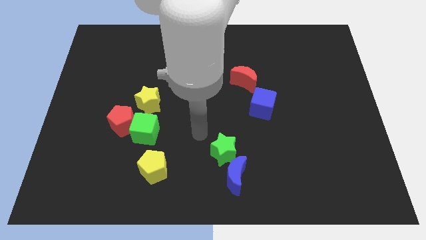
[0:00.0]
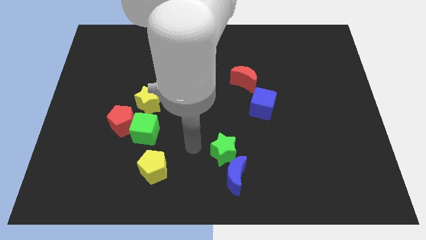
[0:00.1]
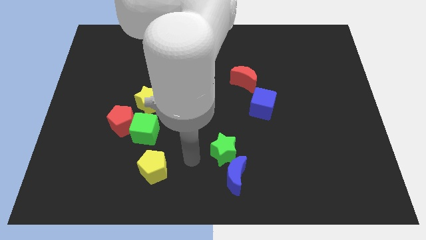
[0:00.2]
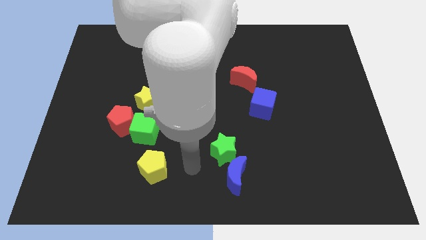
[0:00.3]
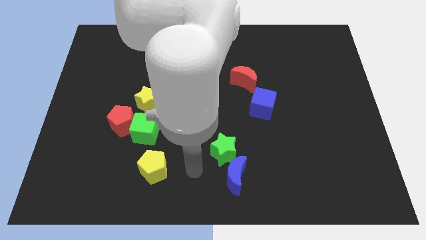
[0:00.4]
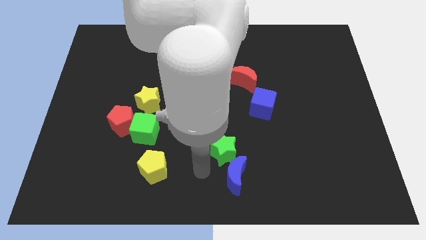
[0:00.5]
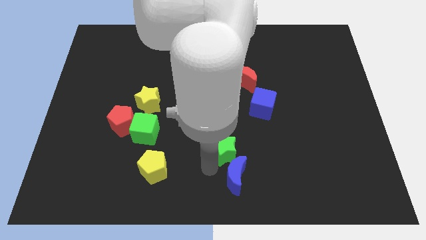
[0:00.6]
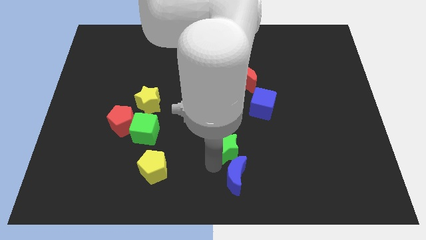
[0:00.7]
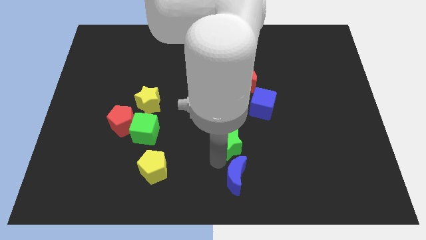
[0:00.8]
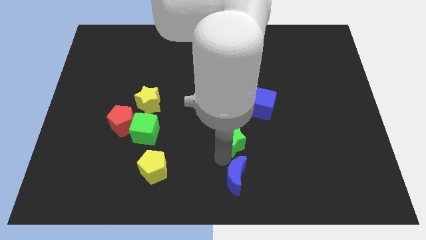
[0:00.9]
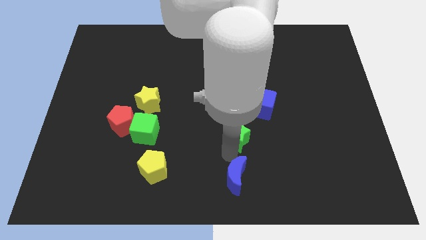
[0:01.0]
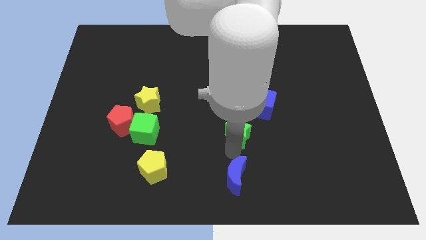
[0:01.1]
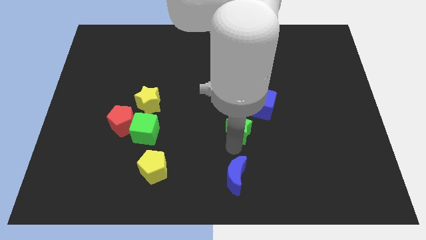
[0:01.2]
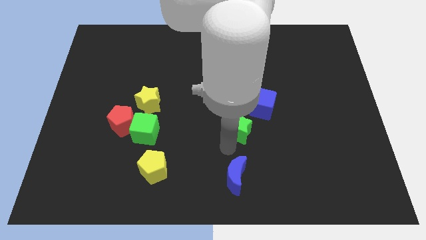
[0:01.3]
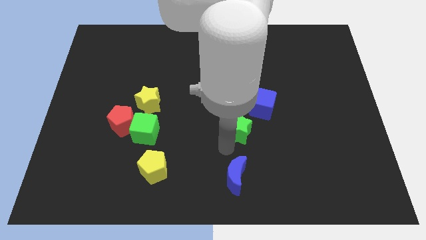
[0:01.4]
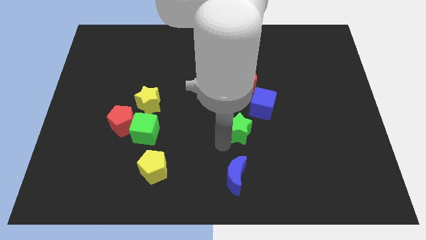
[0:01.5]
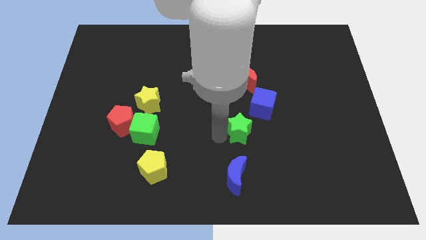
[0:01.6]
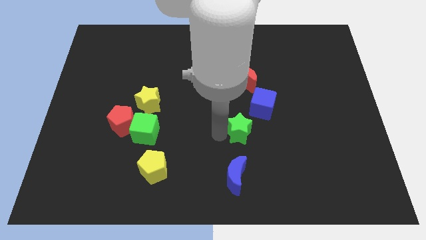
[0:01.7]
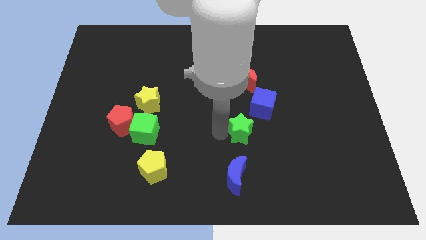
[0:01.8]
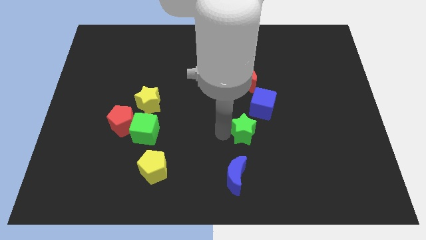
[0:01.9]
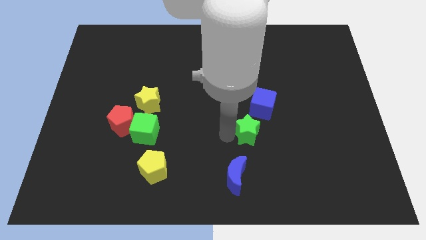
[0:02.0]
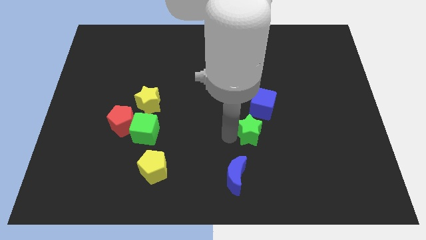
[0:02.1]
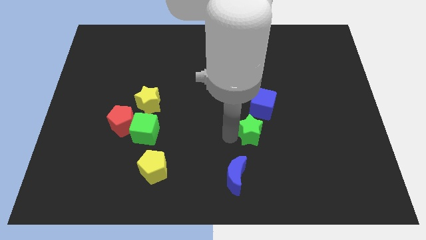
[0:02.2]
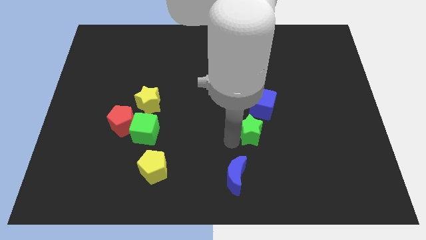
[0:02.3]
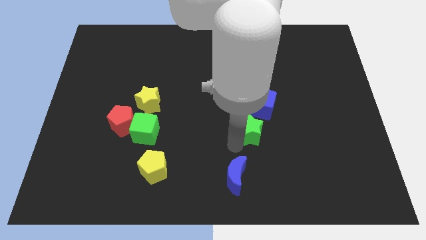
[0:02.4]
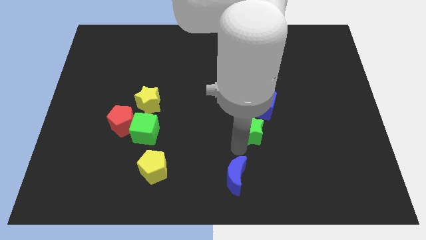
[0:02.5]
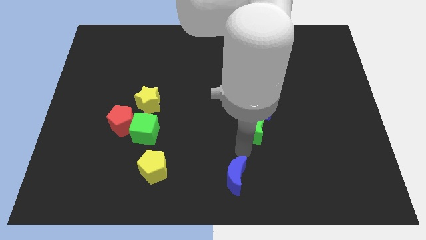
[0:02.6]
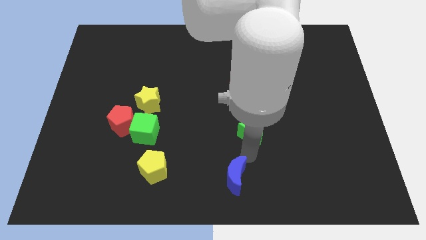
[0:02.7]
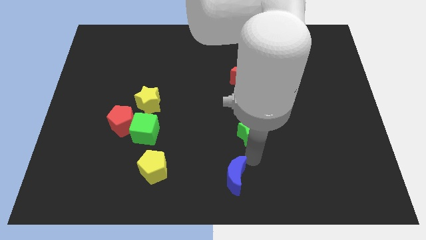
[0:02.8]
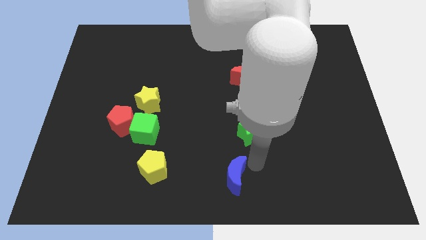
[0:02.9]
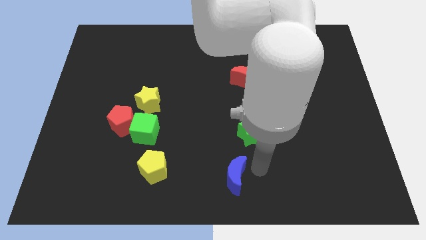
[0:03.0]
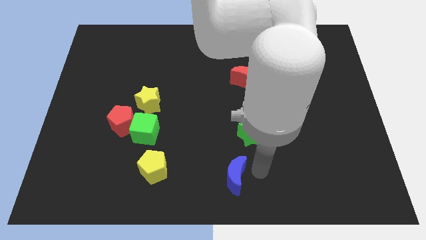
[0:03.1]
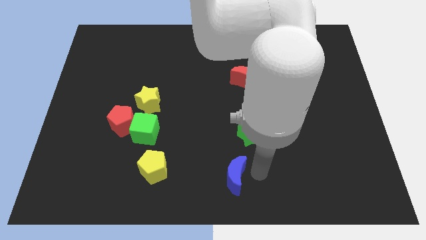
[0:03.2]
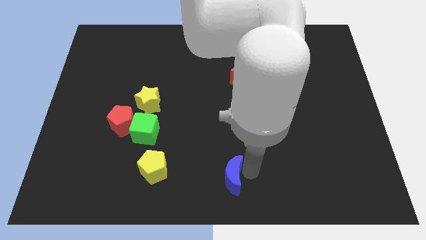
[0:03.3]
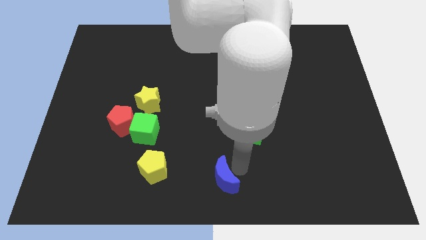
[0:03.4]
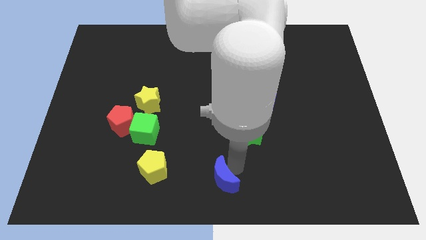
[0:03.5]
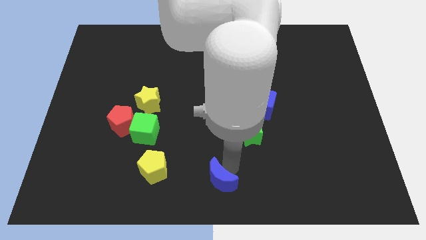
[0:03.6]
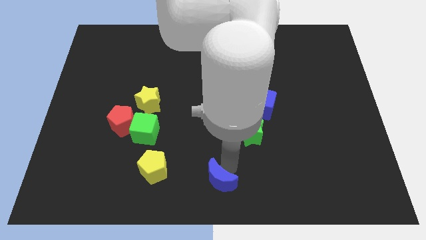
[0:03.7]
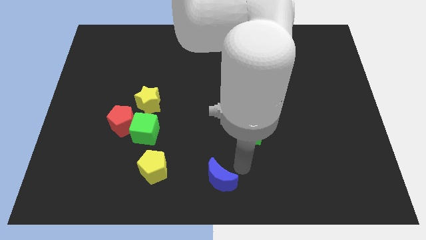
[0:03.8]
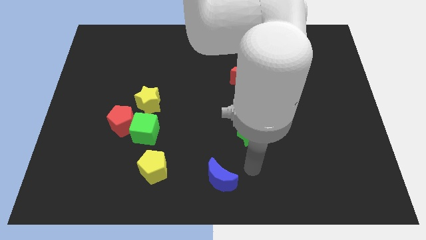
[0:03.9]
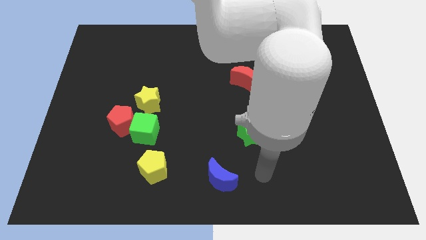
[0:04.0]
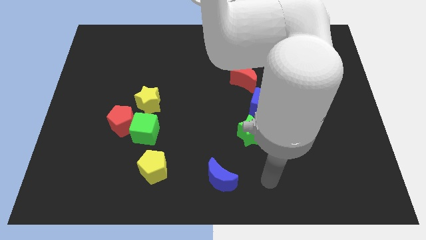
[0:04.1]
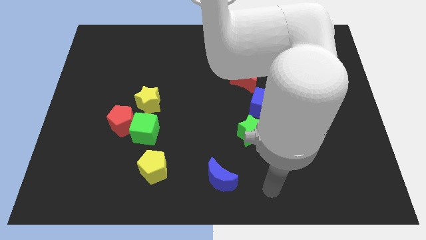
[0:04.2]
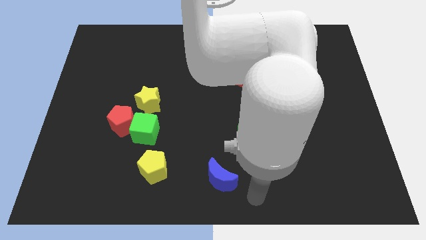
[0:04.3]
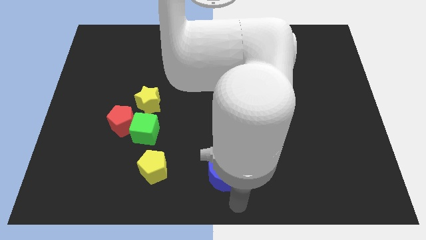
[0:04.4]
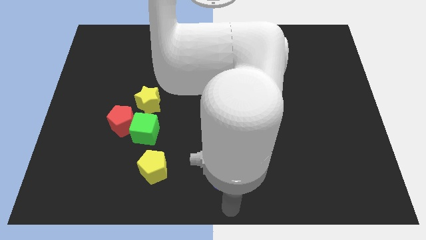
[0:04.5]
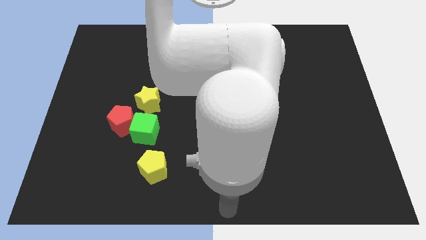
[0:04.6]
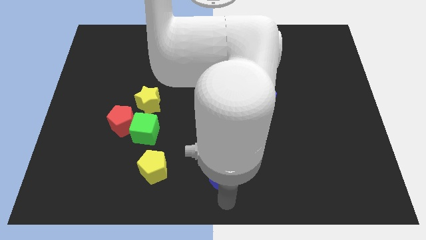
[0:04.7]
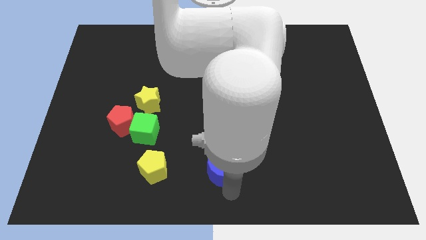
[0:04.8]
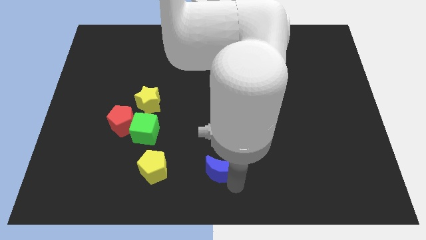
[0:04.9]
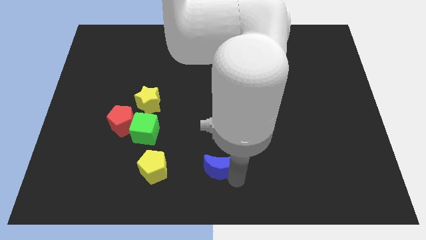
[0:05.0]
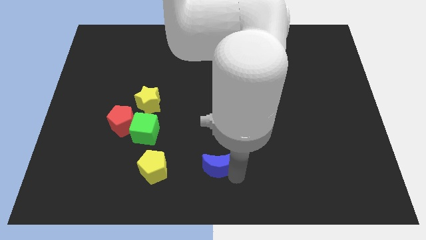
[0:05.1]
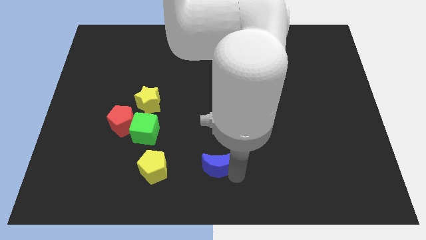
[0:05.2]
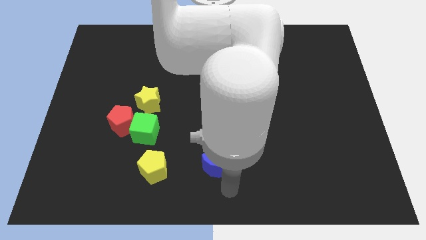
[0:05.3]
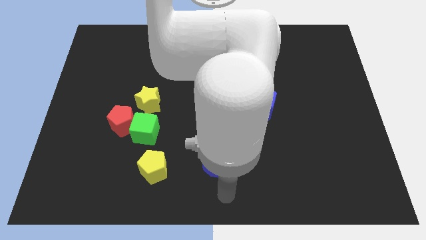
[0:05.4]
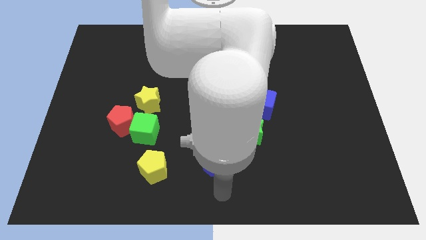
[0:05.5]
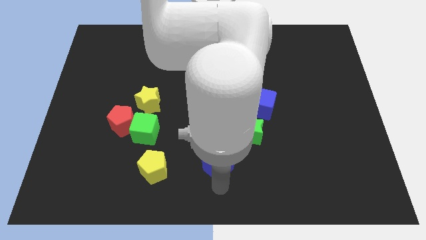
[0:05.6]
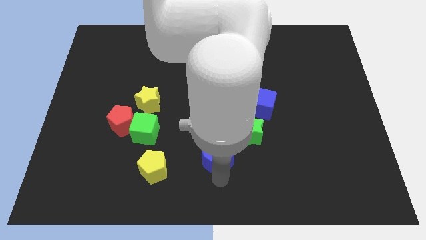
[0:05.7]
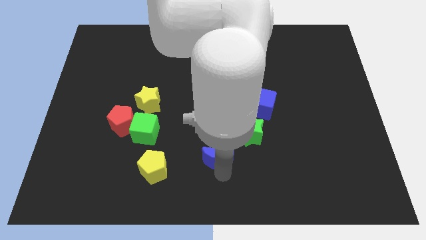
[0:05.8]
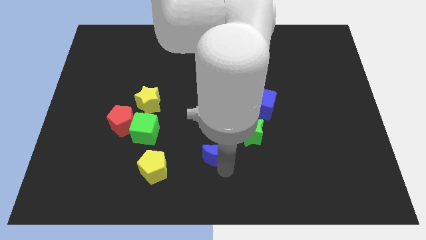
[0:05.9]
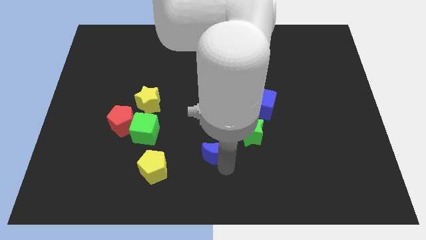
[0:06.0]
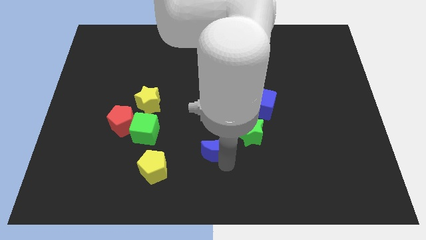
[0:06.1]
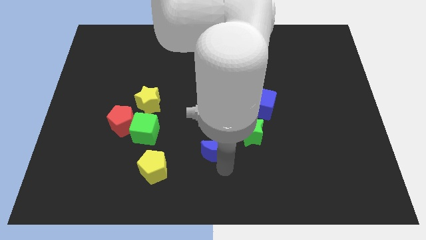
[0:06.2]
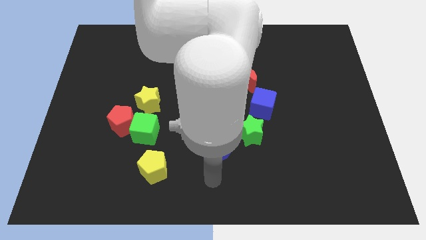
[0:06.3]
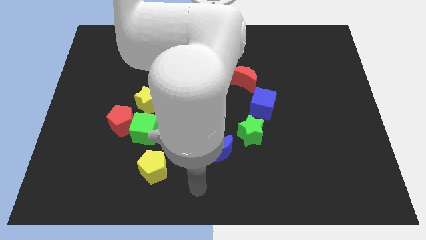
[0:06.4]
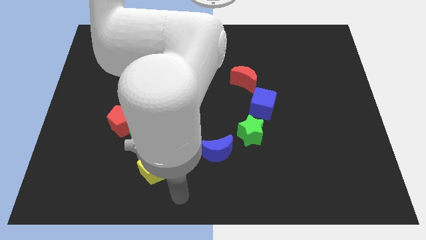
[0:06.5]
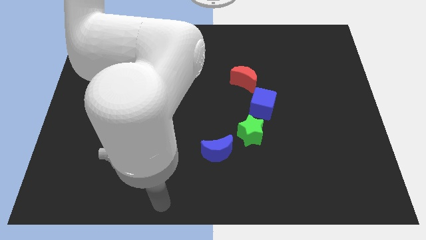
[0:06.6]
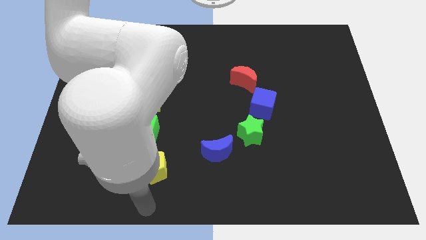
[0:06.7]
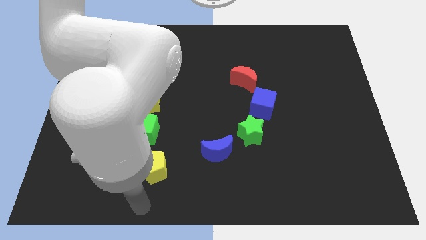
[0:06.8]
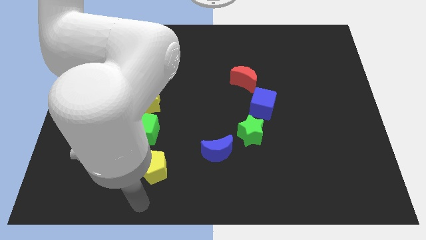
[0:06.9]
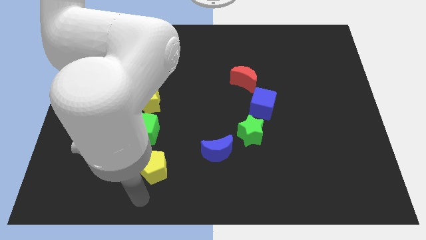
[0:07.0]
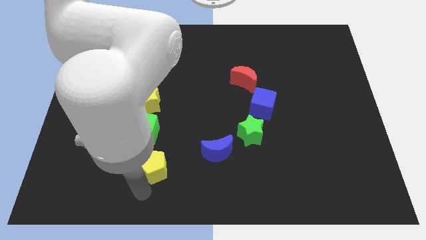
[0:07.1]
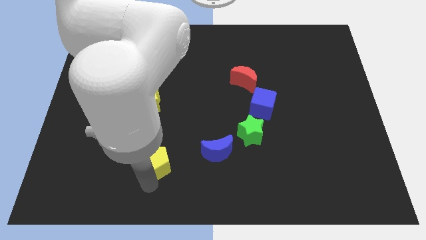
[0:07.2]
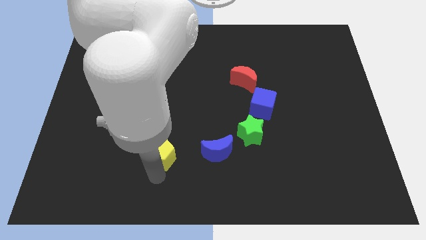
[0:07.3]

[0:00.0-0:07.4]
put green star to the bottom left of blue cube

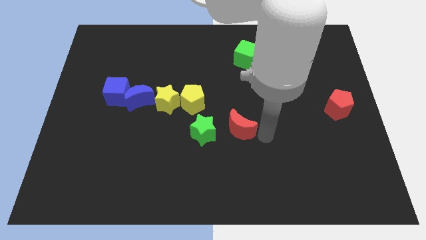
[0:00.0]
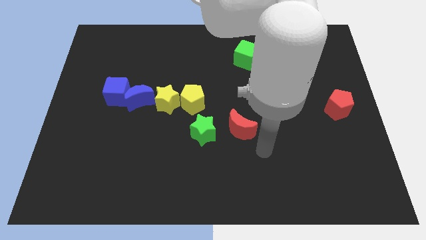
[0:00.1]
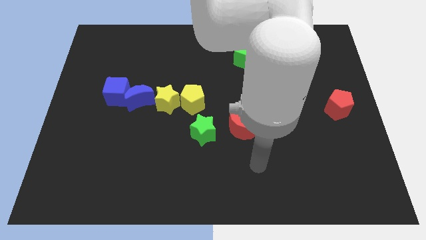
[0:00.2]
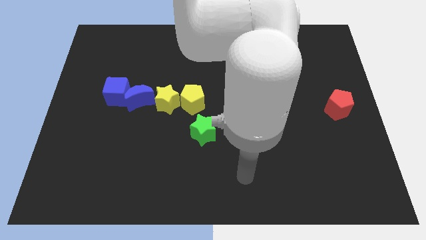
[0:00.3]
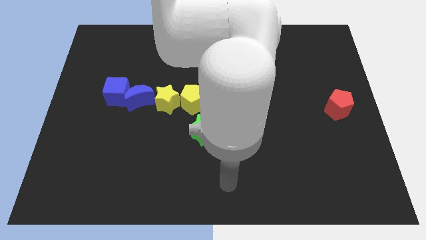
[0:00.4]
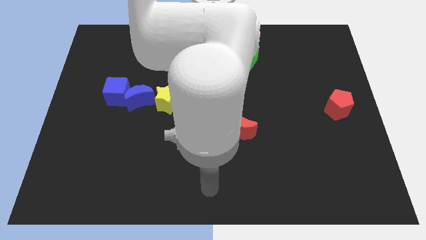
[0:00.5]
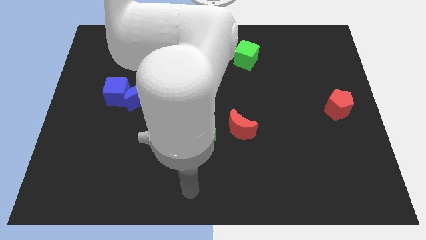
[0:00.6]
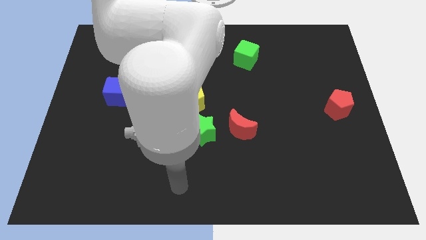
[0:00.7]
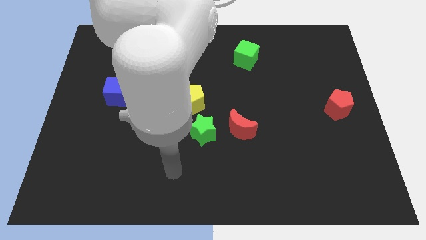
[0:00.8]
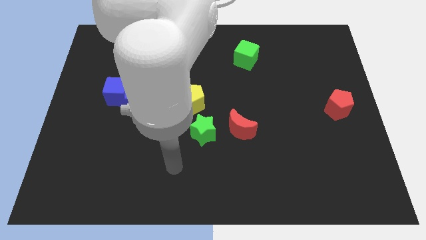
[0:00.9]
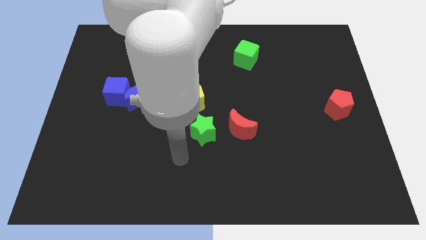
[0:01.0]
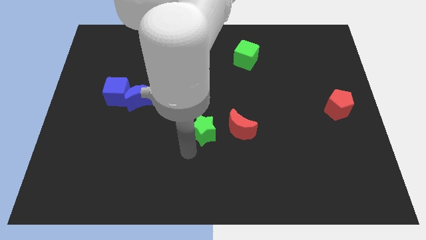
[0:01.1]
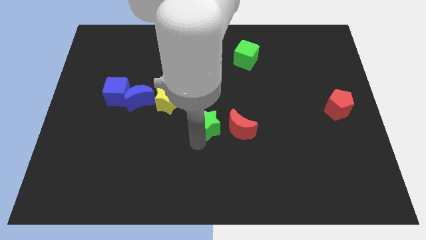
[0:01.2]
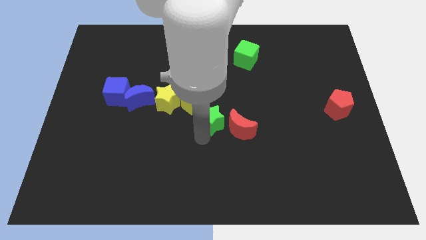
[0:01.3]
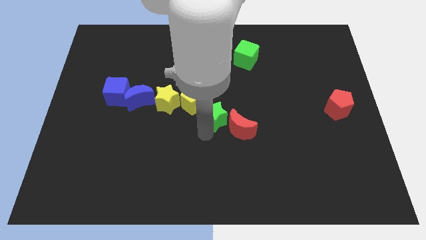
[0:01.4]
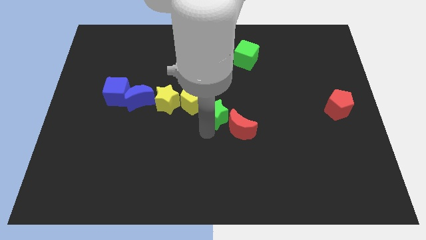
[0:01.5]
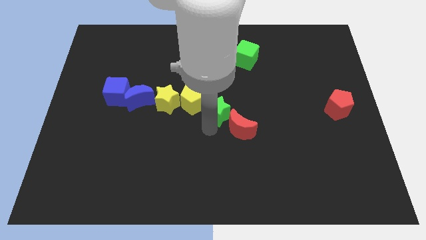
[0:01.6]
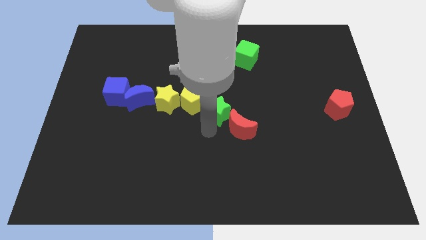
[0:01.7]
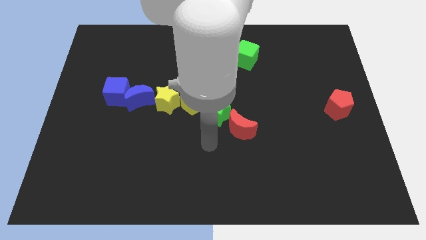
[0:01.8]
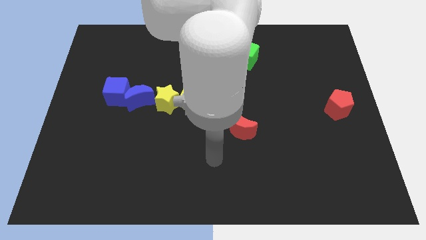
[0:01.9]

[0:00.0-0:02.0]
move the green star towards the right to the yellow pentagon
